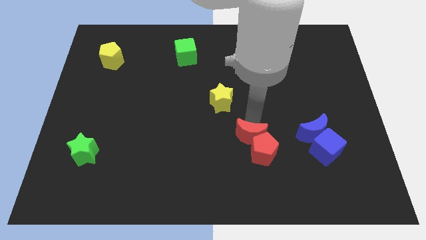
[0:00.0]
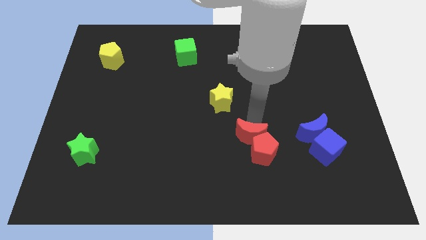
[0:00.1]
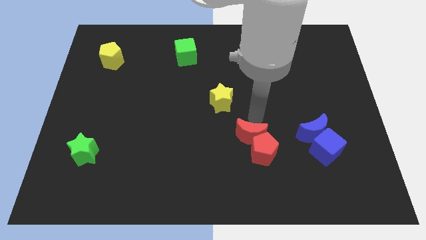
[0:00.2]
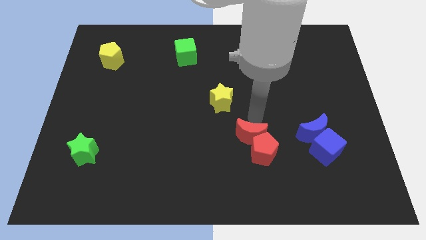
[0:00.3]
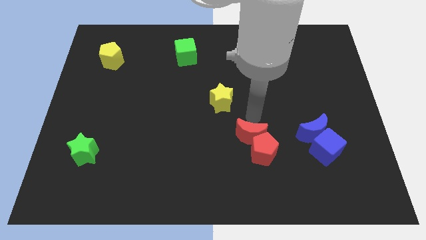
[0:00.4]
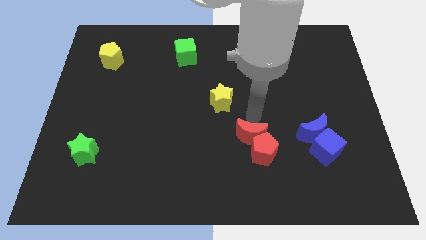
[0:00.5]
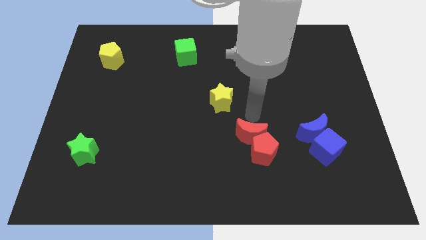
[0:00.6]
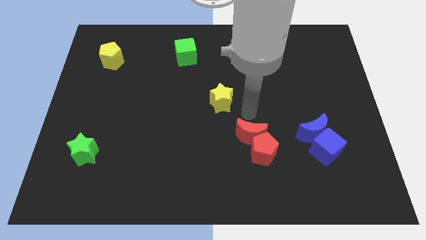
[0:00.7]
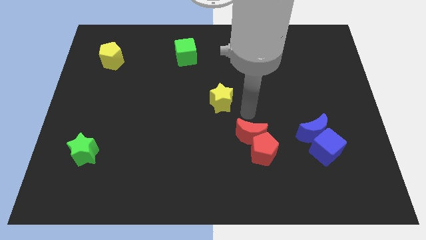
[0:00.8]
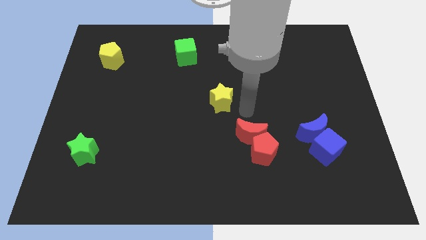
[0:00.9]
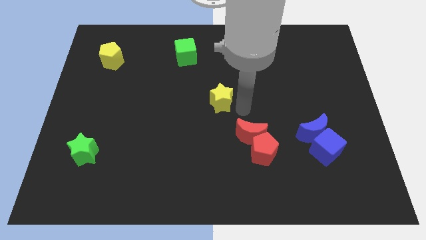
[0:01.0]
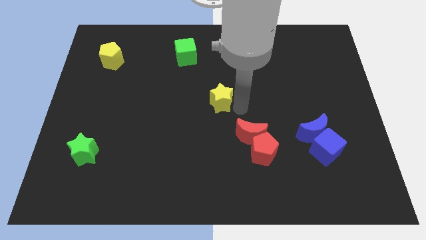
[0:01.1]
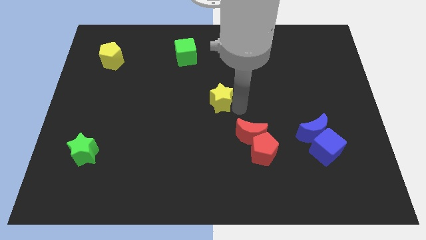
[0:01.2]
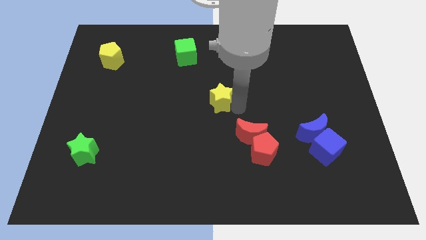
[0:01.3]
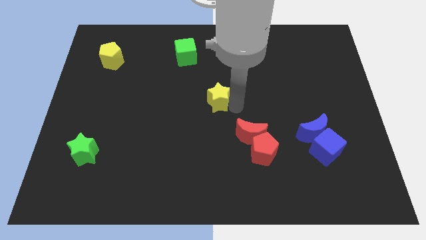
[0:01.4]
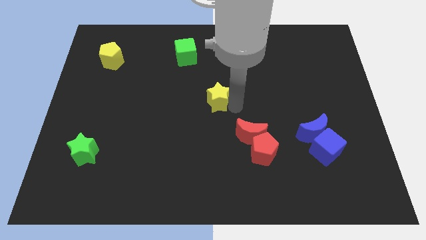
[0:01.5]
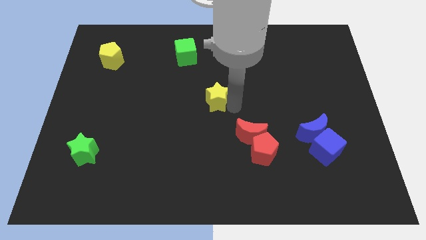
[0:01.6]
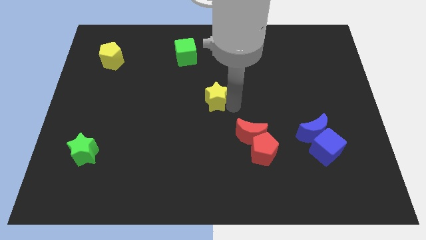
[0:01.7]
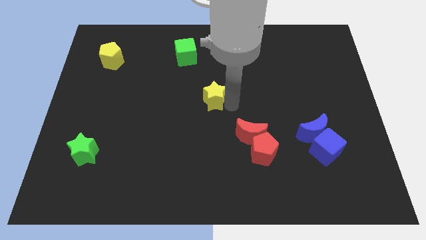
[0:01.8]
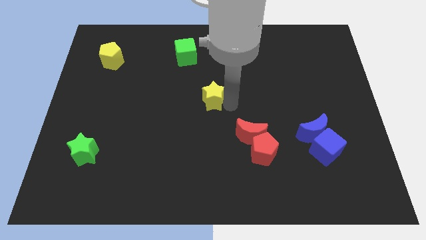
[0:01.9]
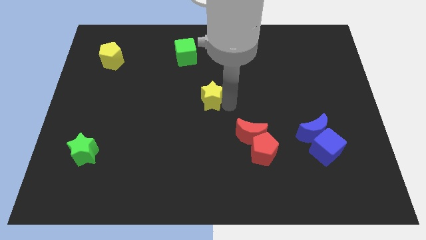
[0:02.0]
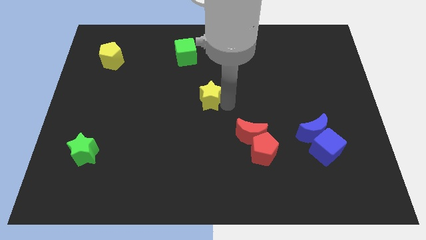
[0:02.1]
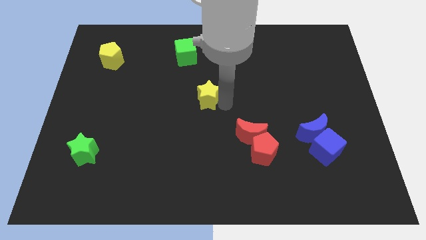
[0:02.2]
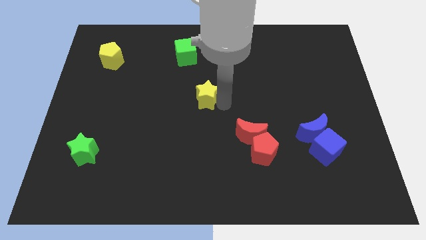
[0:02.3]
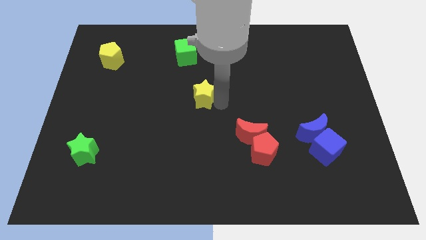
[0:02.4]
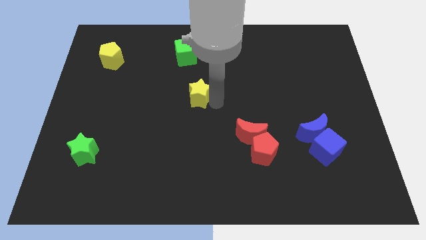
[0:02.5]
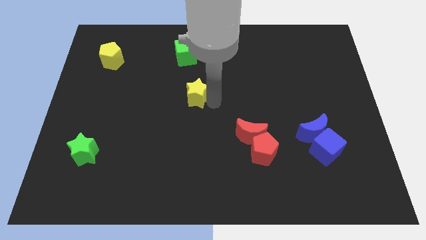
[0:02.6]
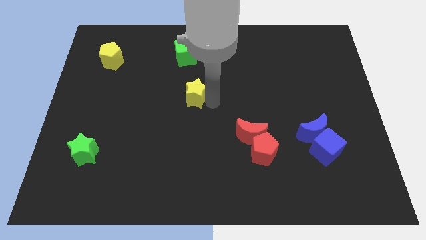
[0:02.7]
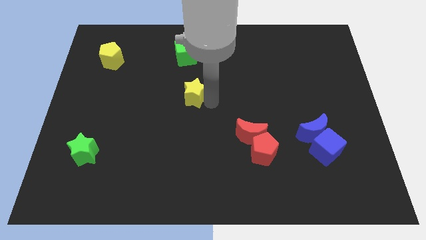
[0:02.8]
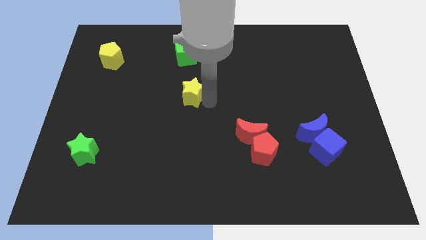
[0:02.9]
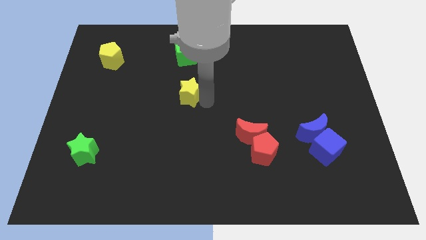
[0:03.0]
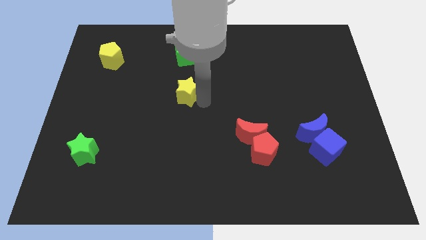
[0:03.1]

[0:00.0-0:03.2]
place the yellow star vertically below the green cube

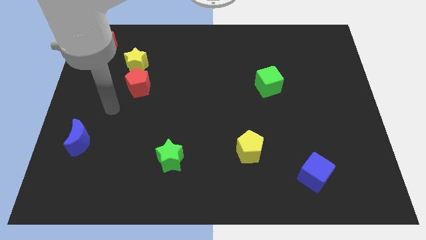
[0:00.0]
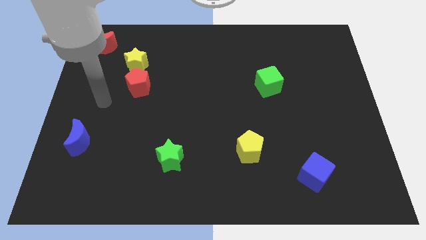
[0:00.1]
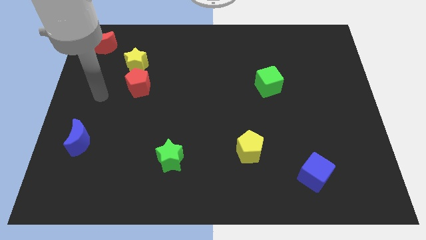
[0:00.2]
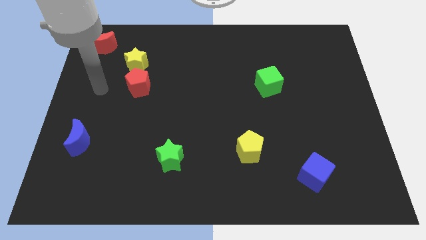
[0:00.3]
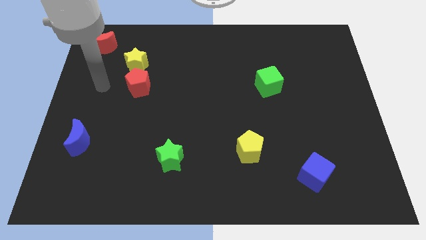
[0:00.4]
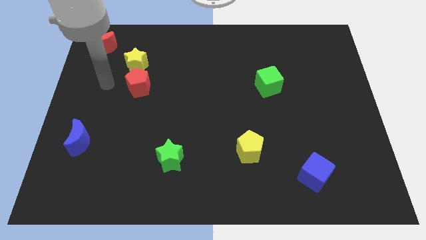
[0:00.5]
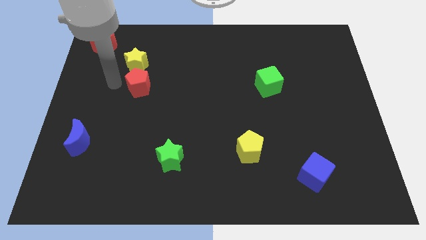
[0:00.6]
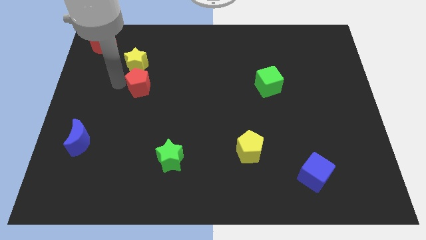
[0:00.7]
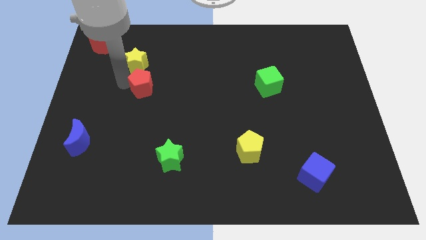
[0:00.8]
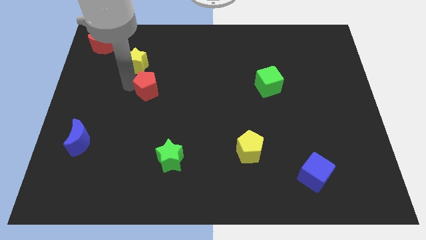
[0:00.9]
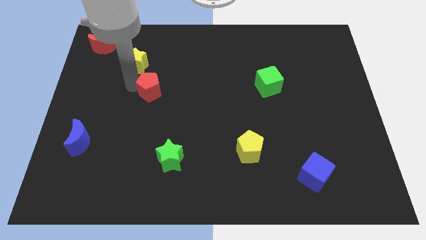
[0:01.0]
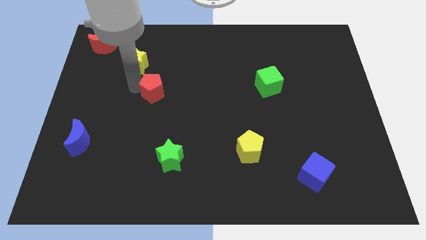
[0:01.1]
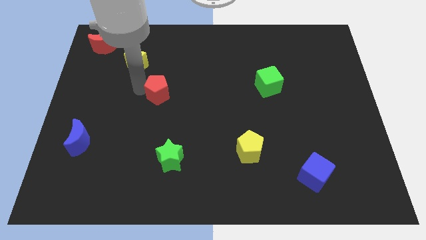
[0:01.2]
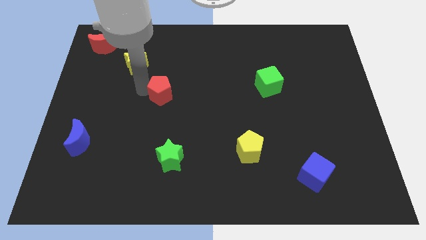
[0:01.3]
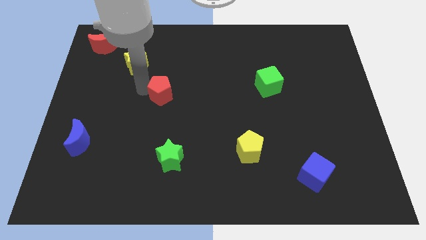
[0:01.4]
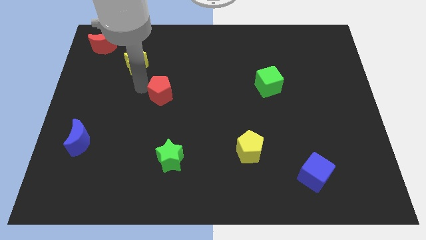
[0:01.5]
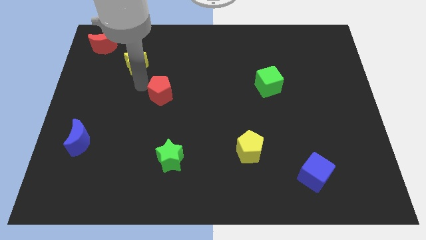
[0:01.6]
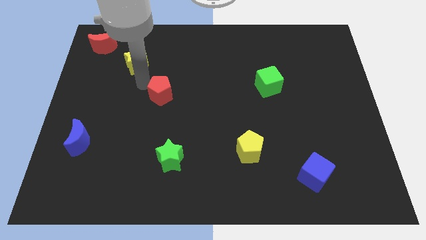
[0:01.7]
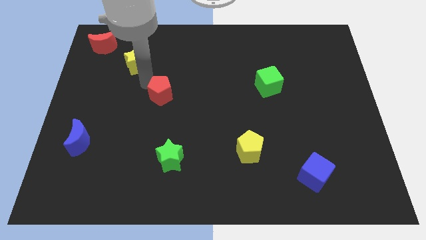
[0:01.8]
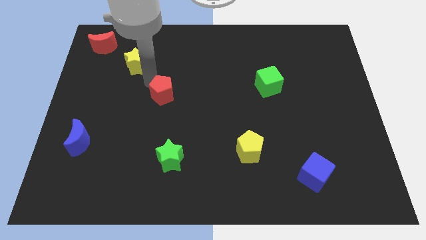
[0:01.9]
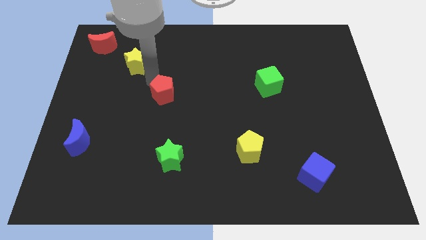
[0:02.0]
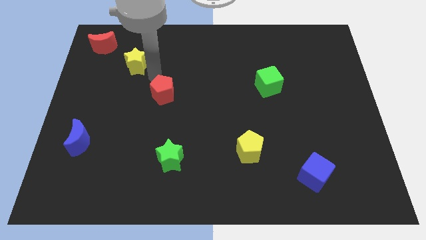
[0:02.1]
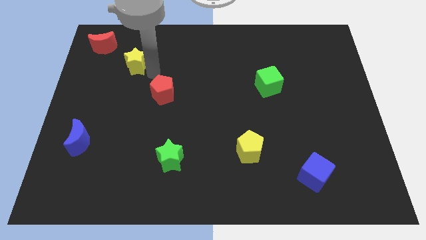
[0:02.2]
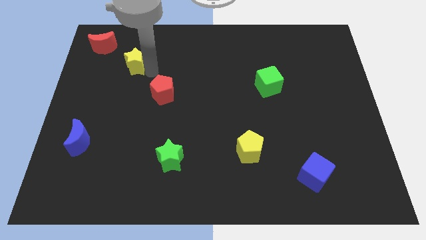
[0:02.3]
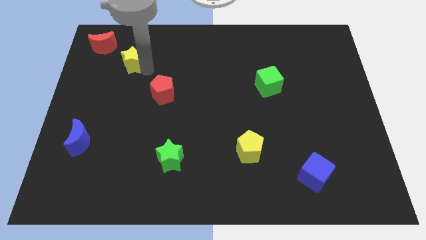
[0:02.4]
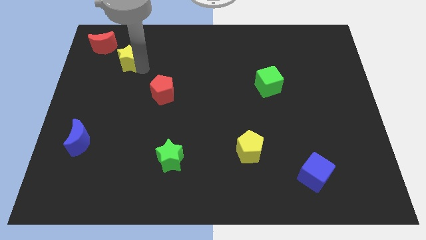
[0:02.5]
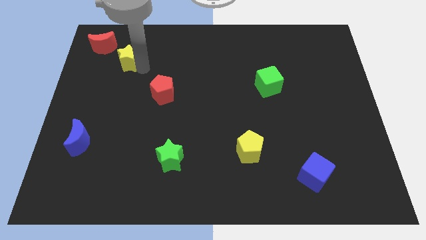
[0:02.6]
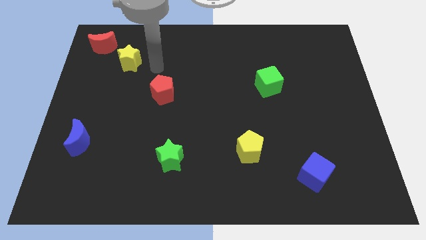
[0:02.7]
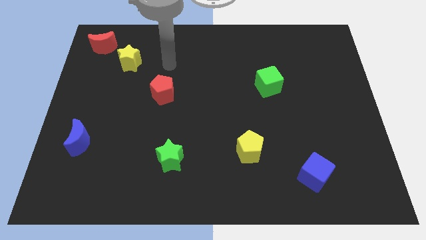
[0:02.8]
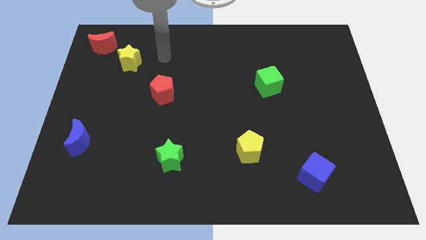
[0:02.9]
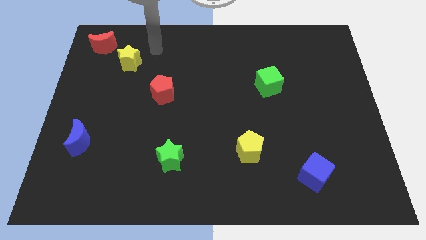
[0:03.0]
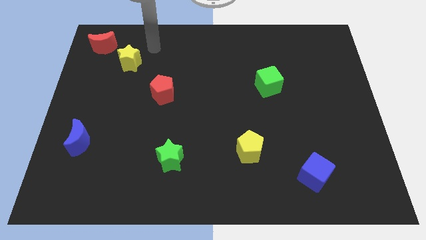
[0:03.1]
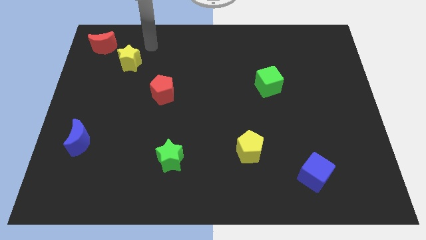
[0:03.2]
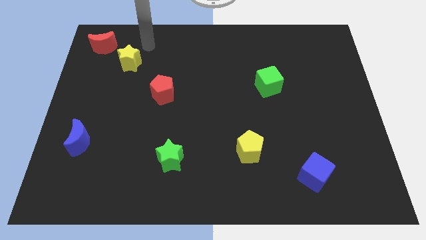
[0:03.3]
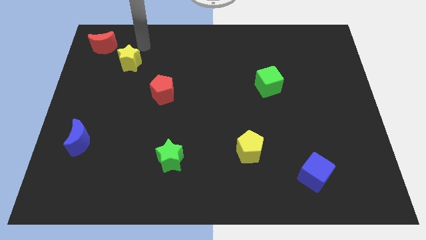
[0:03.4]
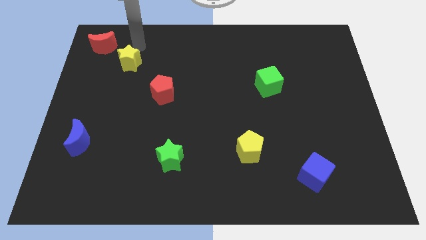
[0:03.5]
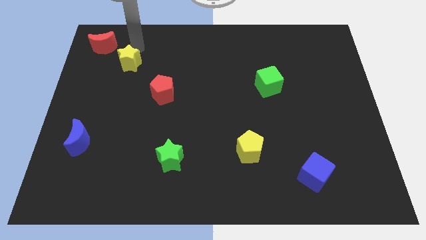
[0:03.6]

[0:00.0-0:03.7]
separate the yellow star and the red pentagon

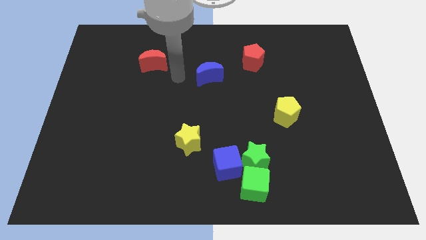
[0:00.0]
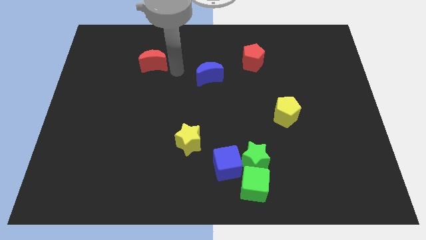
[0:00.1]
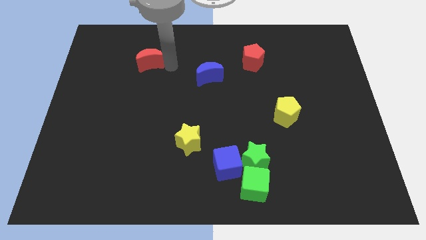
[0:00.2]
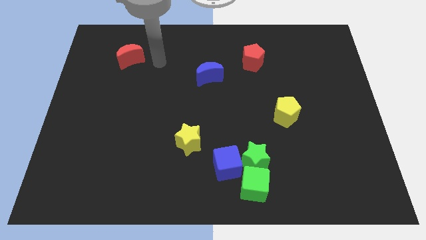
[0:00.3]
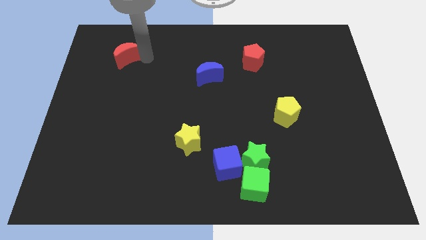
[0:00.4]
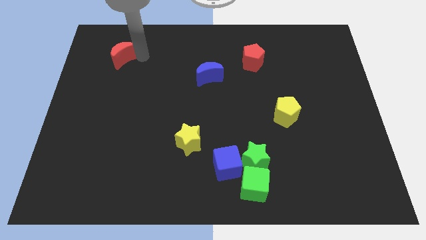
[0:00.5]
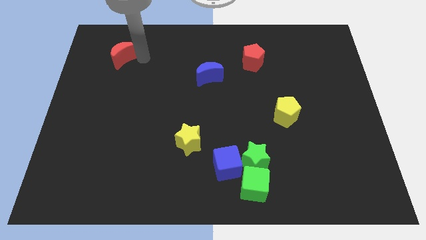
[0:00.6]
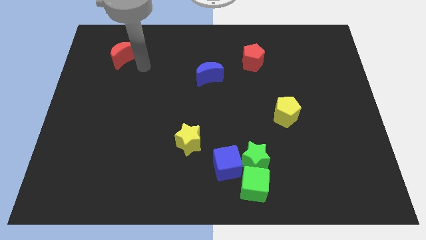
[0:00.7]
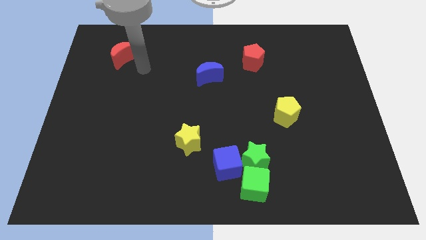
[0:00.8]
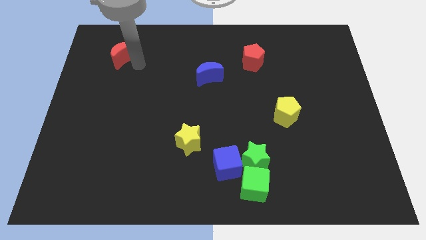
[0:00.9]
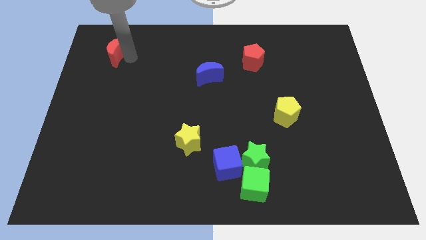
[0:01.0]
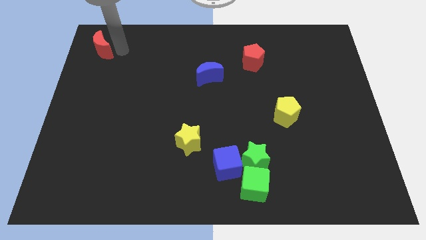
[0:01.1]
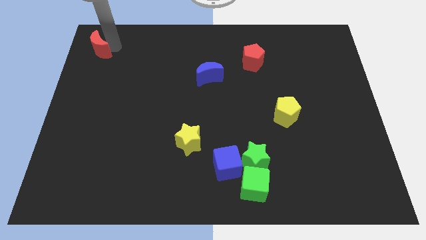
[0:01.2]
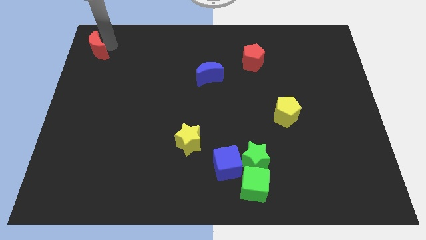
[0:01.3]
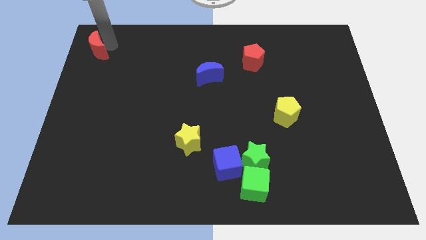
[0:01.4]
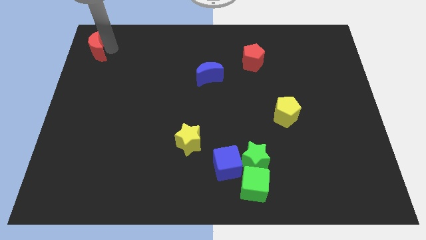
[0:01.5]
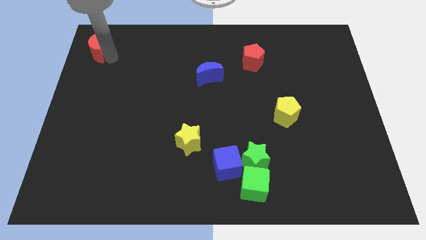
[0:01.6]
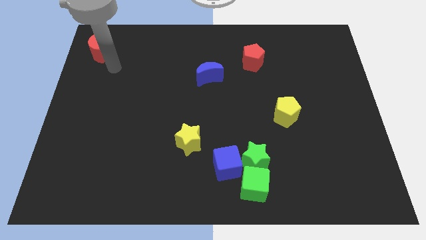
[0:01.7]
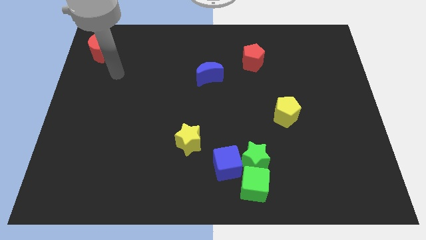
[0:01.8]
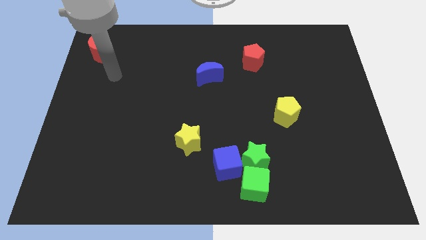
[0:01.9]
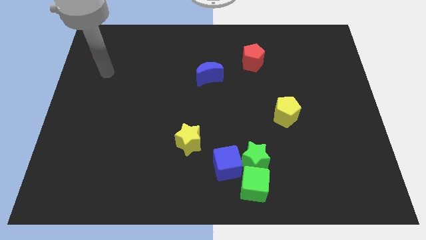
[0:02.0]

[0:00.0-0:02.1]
push red moon towards top left
